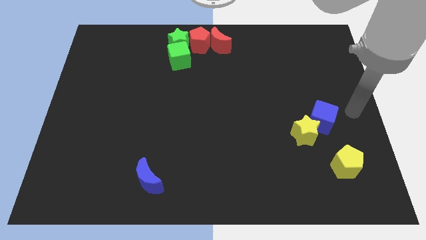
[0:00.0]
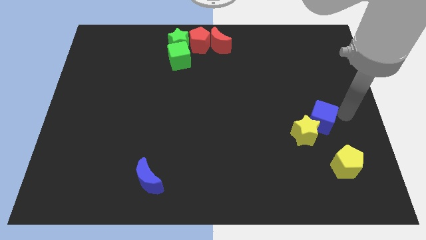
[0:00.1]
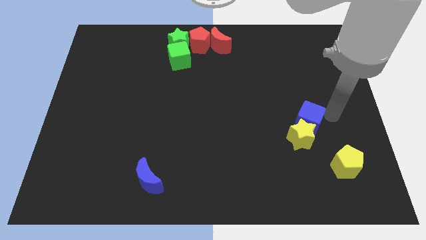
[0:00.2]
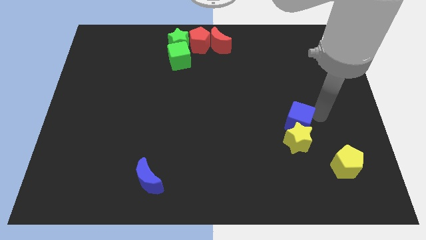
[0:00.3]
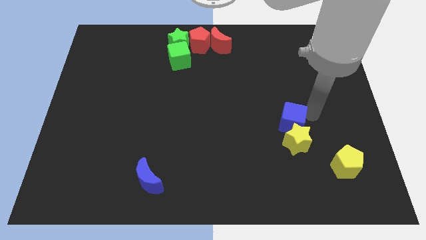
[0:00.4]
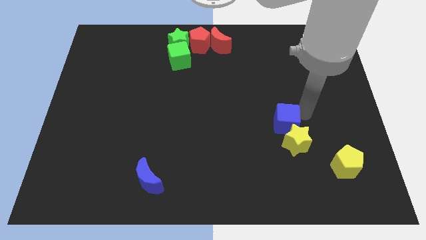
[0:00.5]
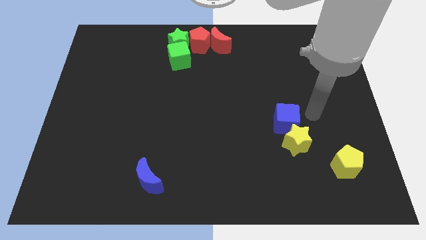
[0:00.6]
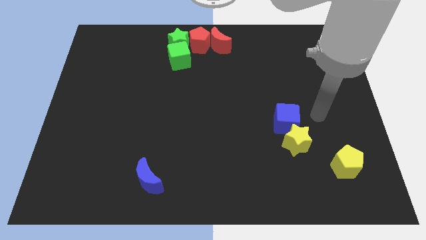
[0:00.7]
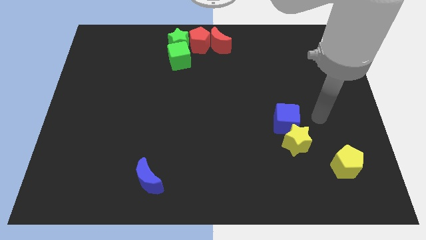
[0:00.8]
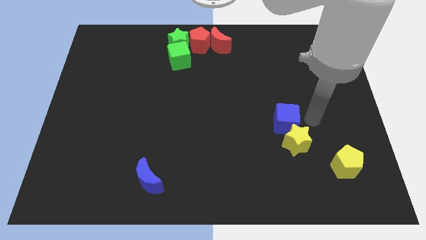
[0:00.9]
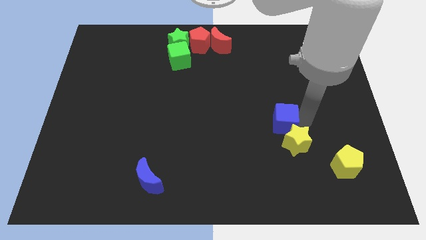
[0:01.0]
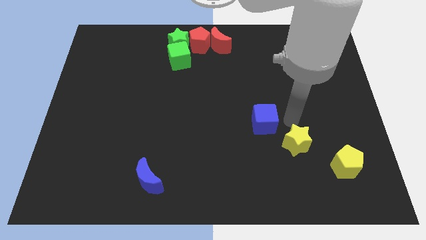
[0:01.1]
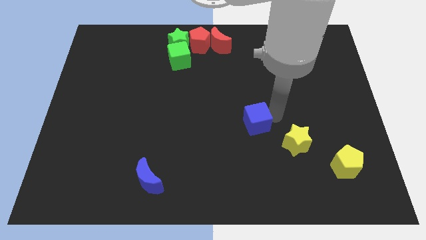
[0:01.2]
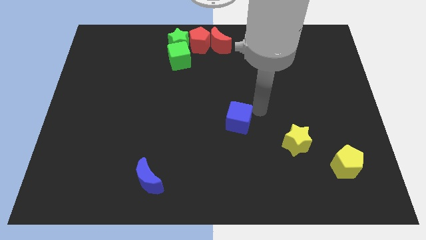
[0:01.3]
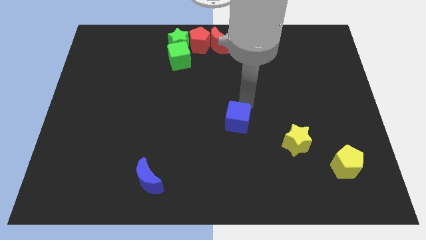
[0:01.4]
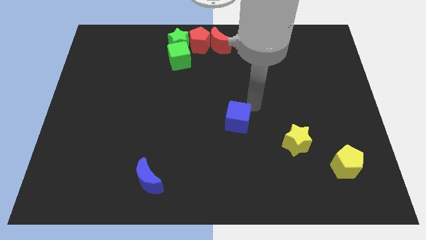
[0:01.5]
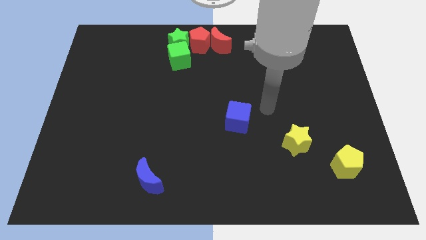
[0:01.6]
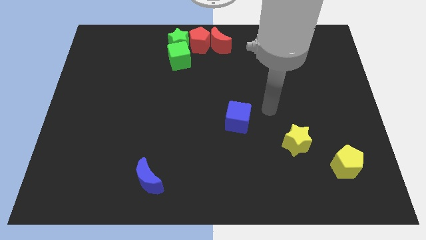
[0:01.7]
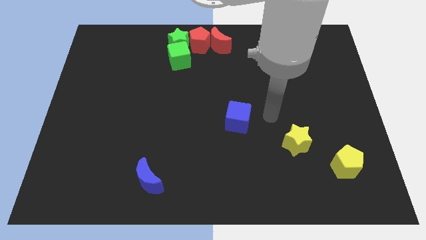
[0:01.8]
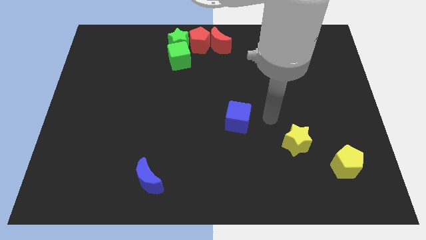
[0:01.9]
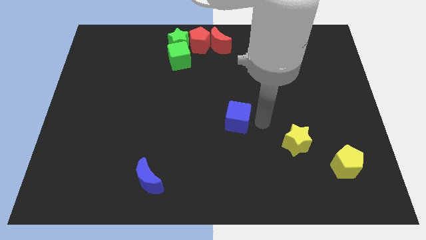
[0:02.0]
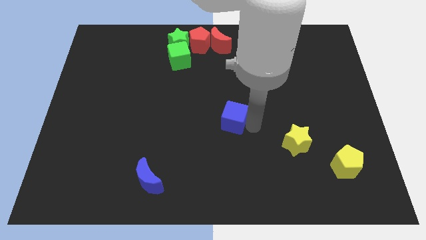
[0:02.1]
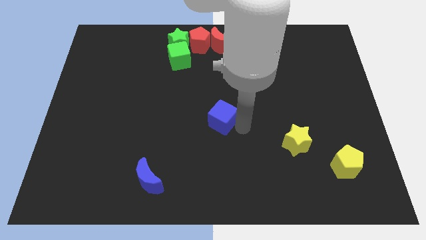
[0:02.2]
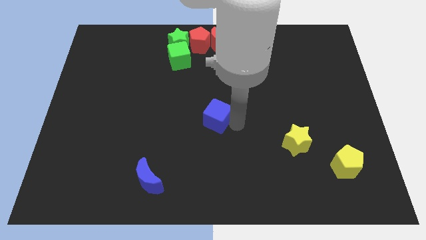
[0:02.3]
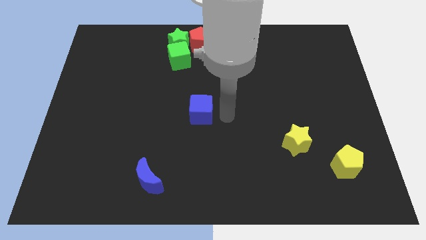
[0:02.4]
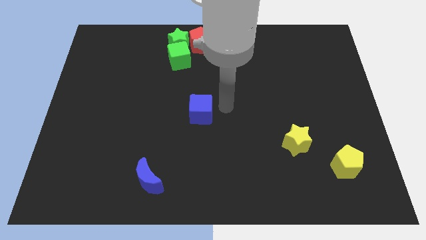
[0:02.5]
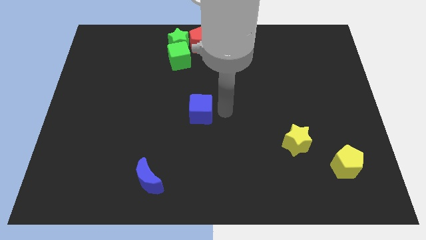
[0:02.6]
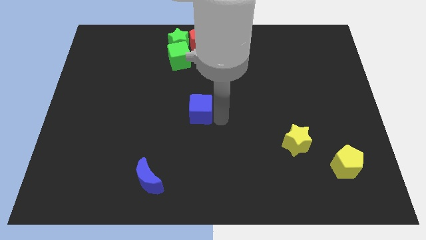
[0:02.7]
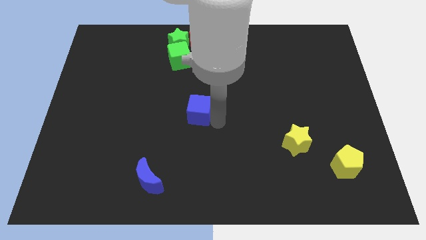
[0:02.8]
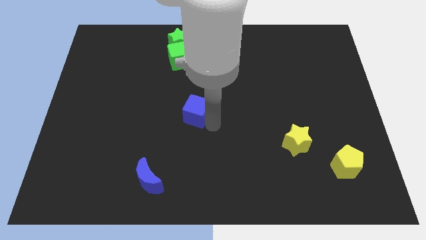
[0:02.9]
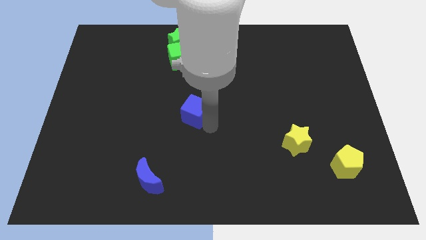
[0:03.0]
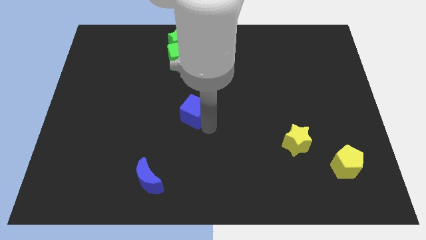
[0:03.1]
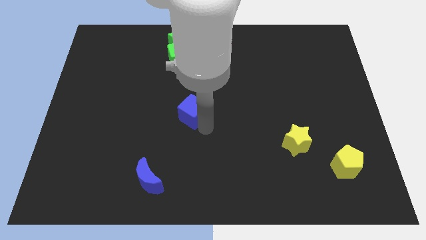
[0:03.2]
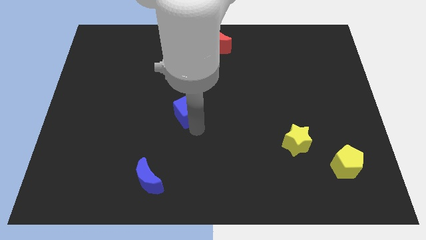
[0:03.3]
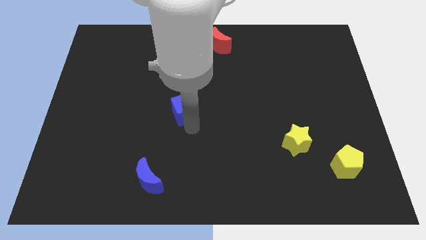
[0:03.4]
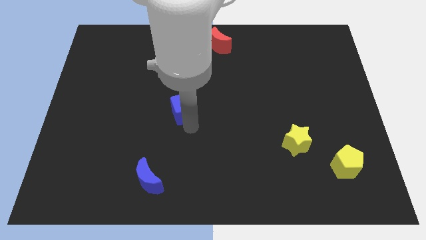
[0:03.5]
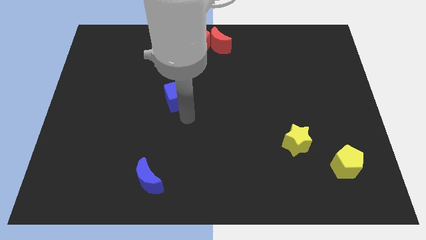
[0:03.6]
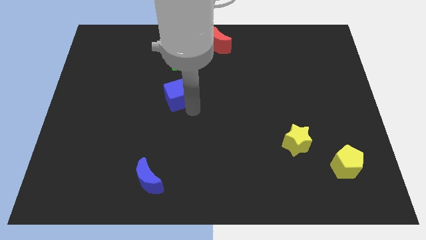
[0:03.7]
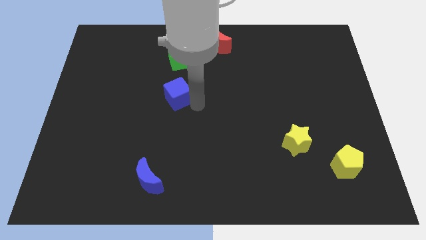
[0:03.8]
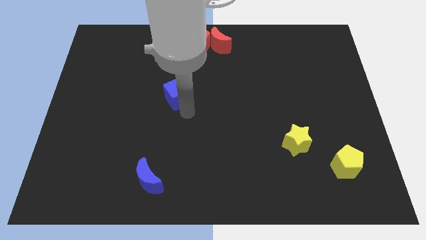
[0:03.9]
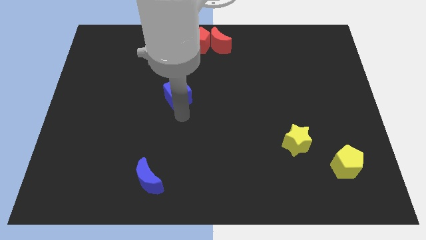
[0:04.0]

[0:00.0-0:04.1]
separate blue cube from yellow star

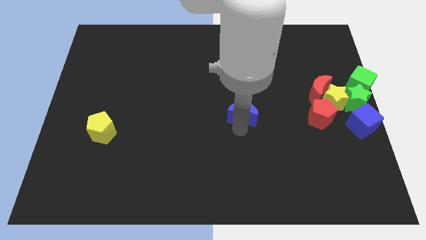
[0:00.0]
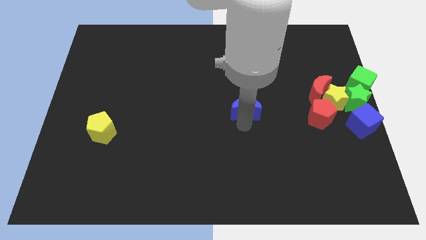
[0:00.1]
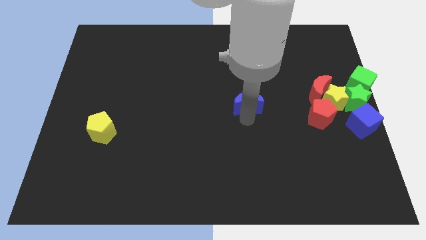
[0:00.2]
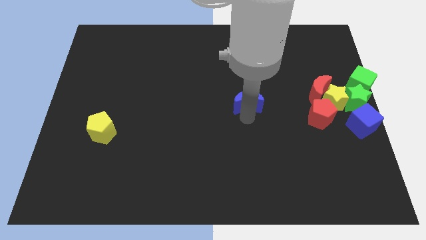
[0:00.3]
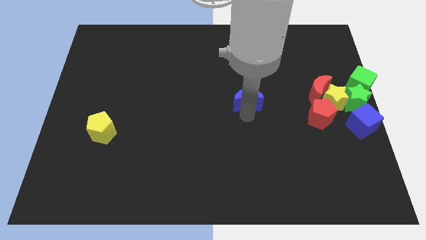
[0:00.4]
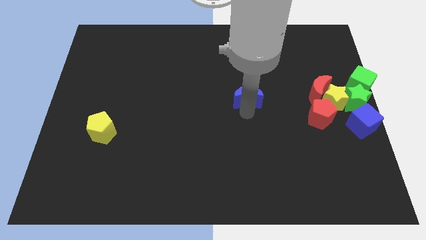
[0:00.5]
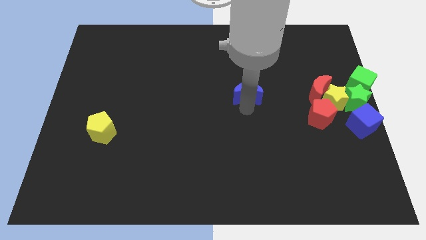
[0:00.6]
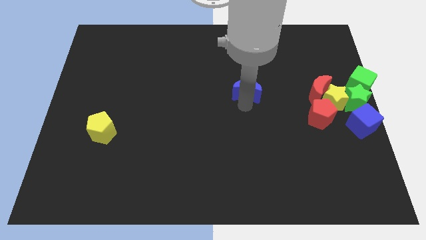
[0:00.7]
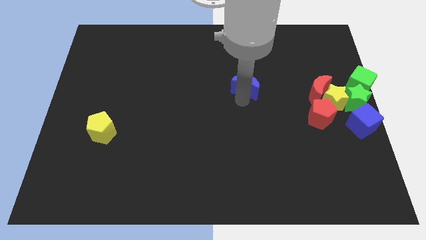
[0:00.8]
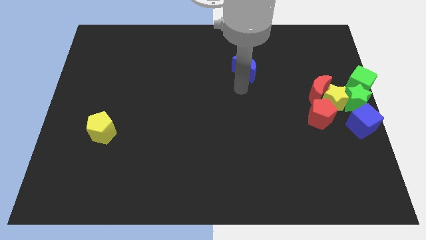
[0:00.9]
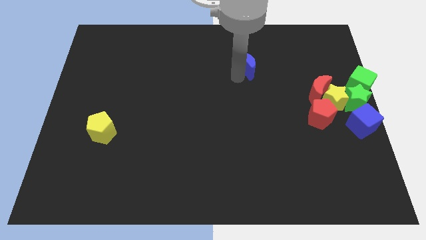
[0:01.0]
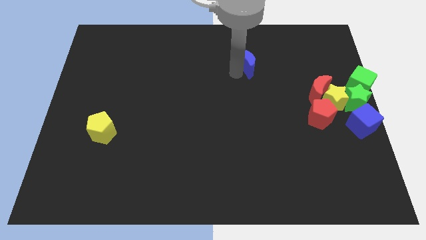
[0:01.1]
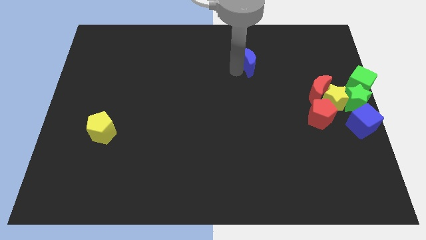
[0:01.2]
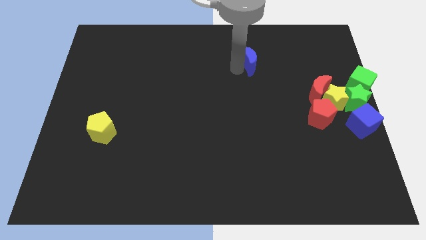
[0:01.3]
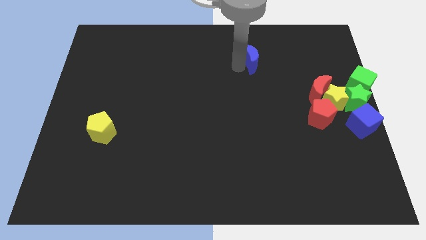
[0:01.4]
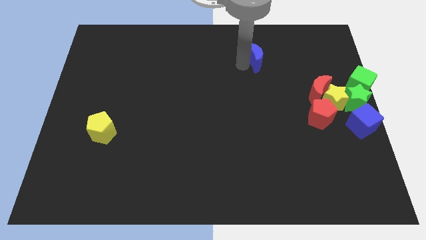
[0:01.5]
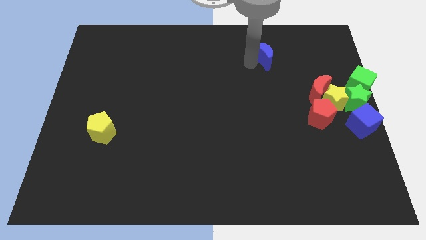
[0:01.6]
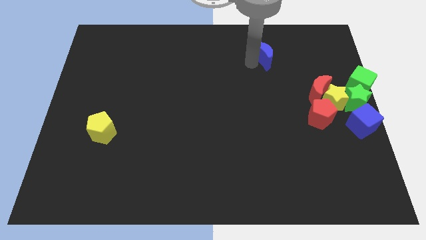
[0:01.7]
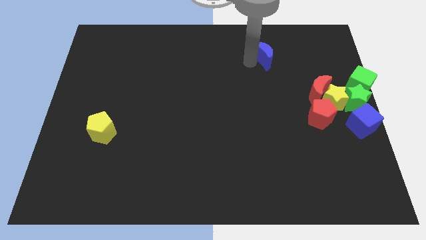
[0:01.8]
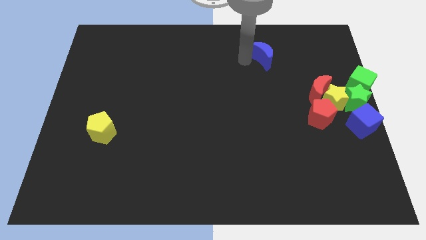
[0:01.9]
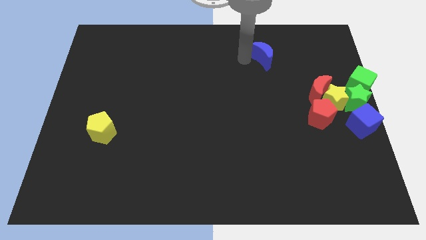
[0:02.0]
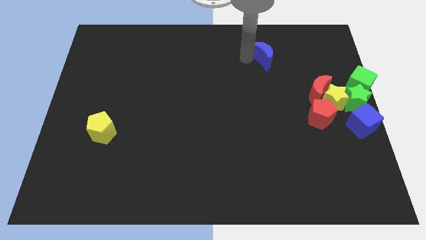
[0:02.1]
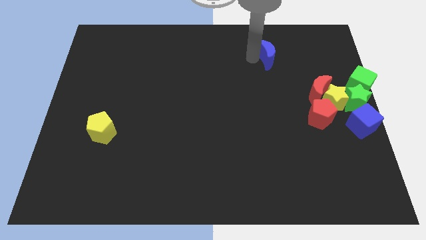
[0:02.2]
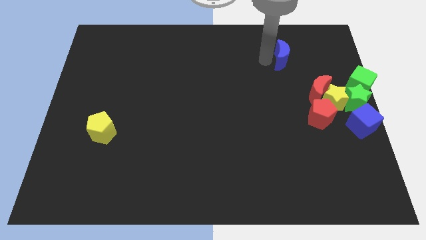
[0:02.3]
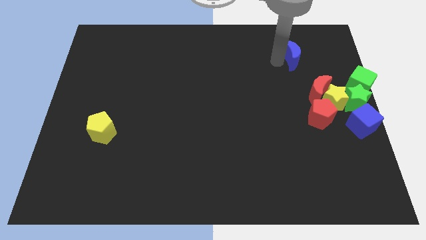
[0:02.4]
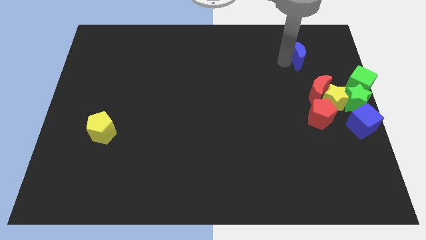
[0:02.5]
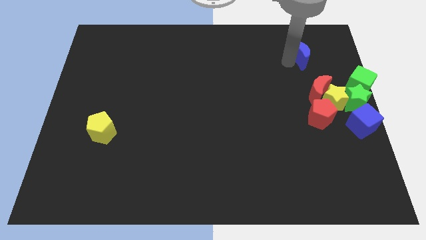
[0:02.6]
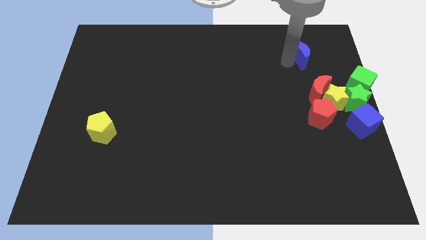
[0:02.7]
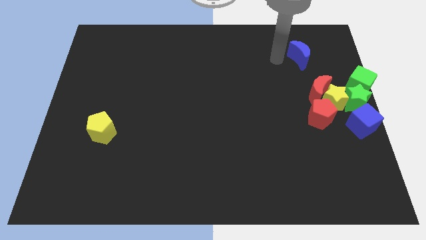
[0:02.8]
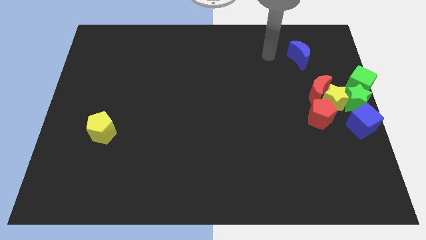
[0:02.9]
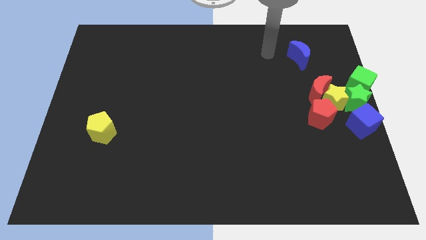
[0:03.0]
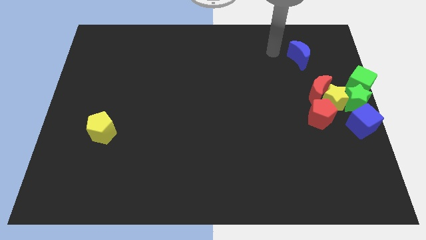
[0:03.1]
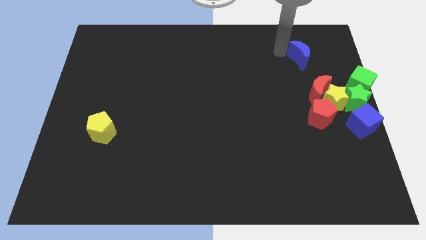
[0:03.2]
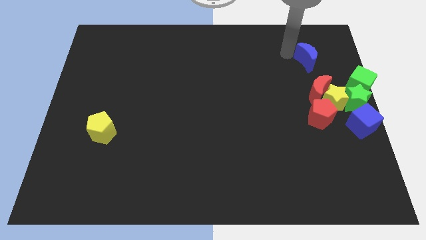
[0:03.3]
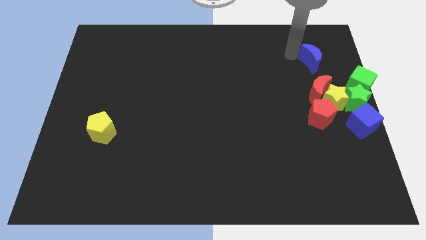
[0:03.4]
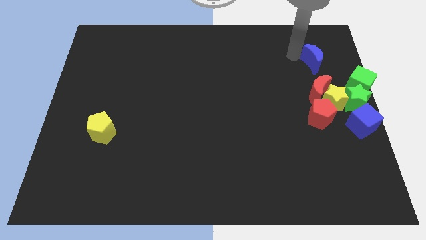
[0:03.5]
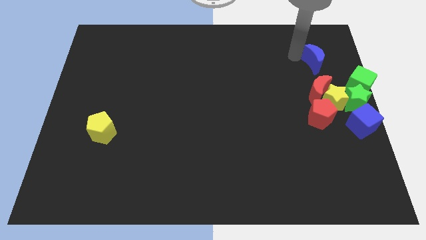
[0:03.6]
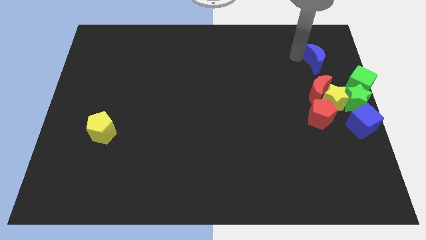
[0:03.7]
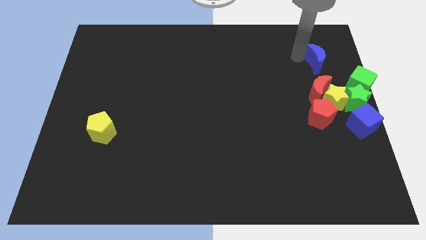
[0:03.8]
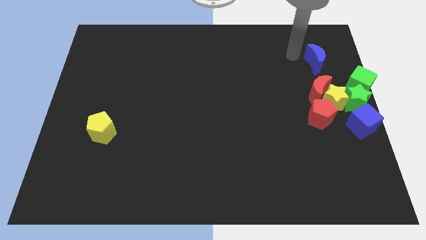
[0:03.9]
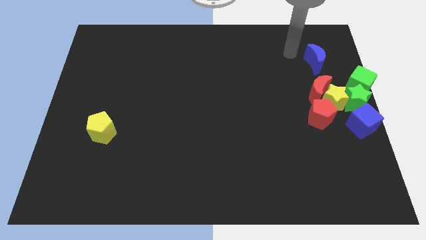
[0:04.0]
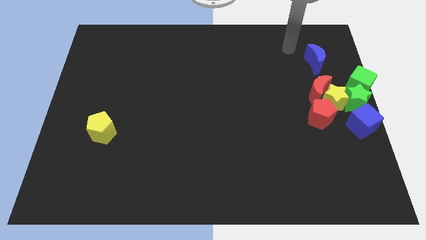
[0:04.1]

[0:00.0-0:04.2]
put the blue crescent and red crescent in a line vertically

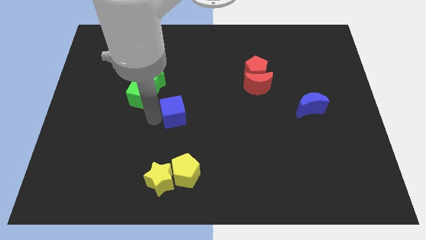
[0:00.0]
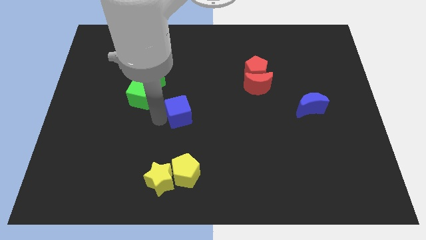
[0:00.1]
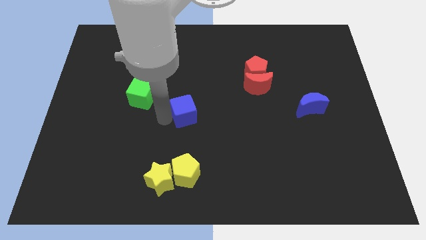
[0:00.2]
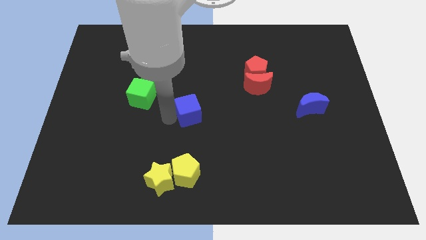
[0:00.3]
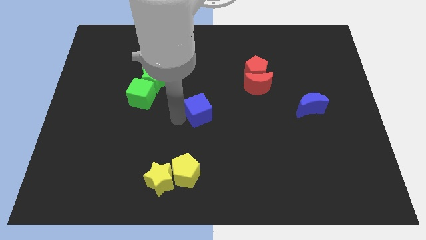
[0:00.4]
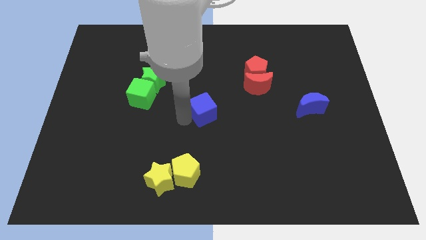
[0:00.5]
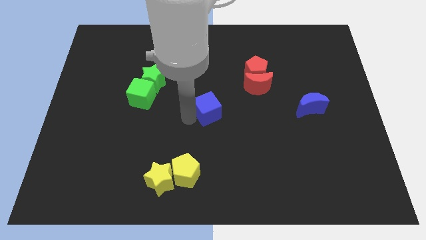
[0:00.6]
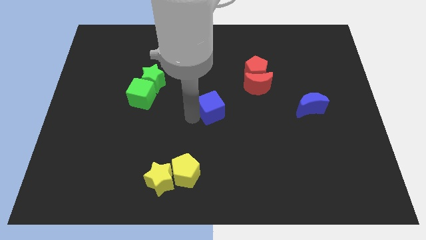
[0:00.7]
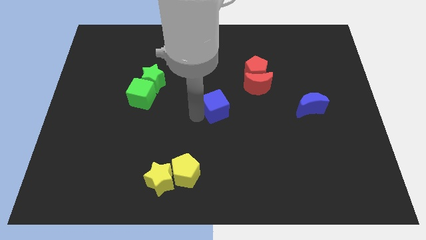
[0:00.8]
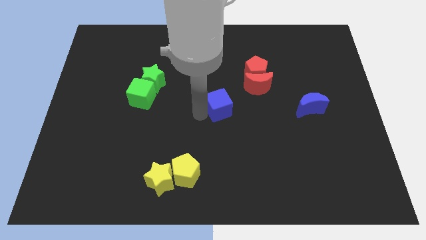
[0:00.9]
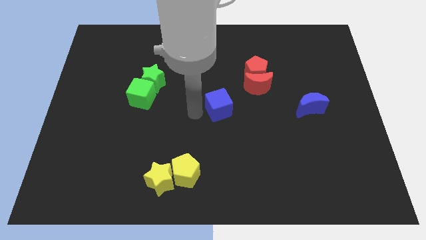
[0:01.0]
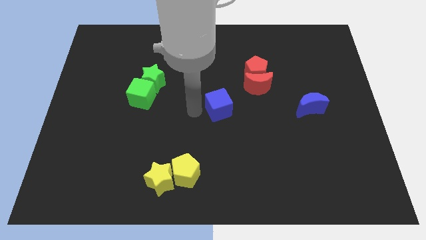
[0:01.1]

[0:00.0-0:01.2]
drag the blue cube to the center
